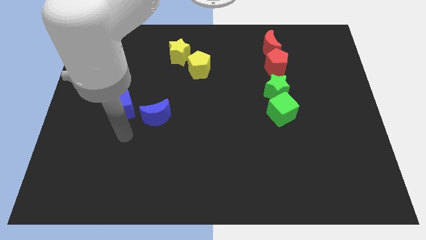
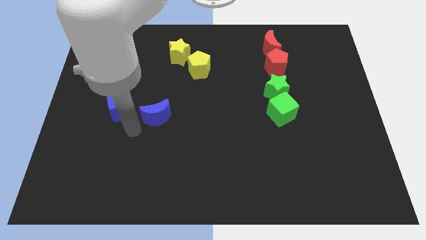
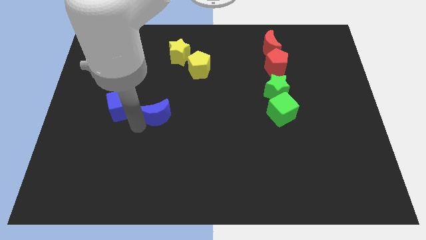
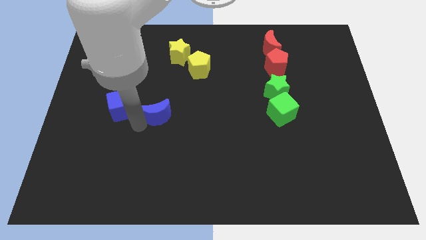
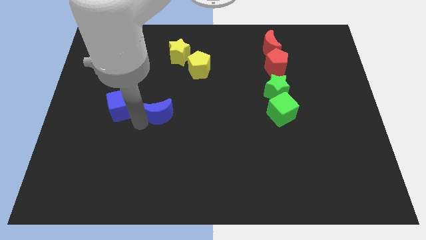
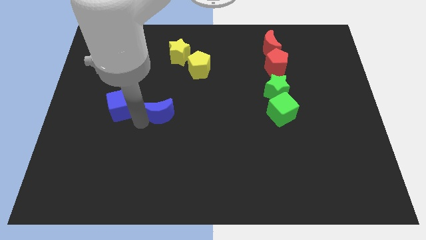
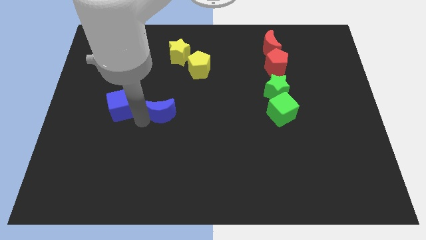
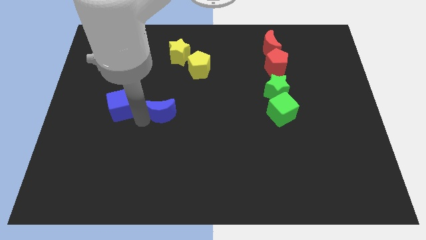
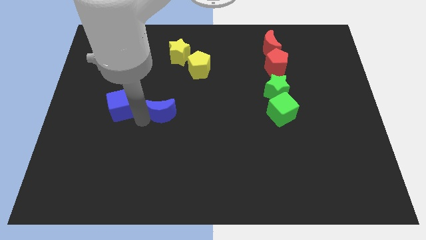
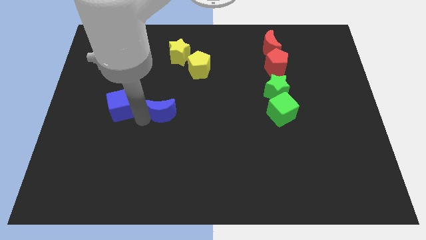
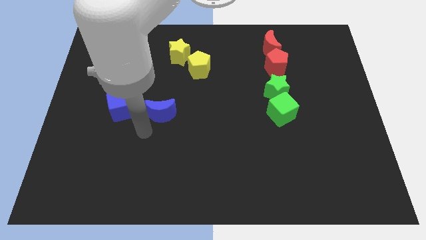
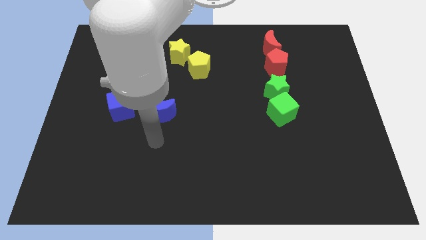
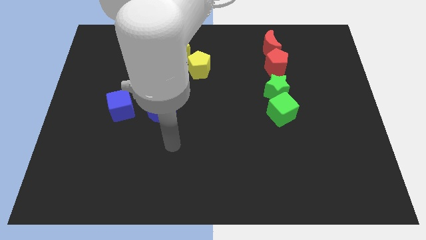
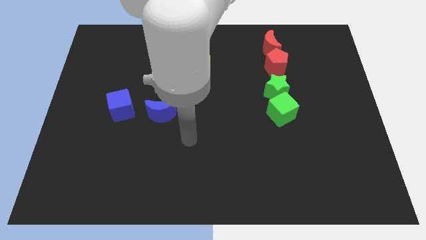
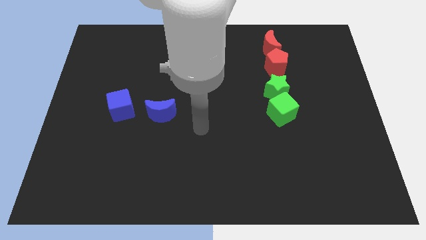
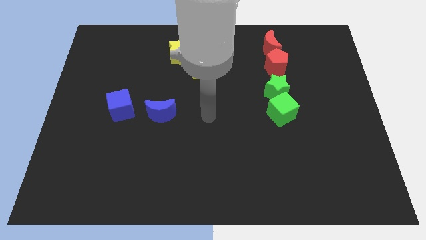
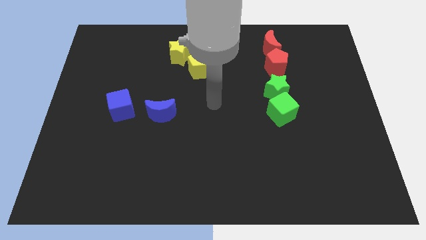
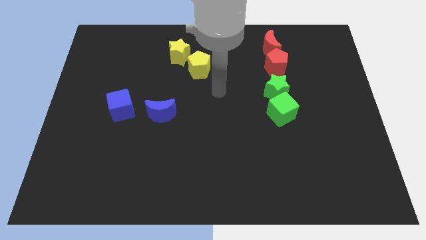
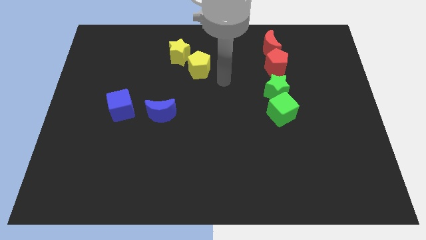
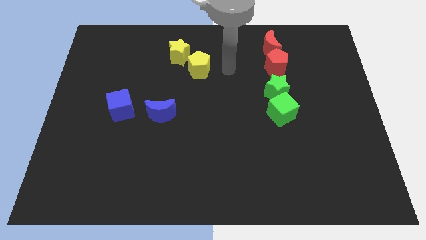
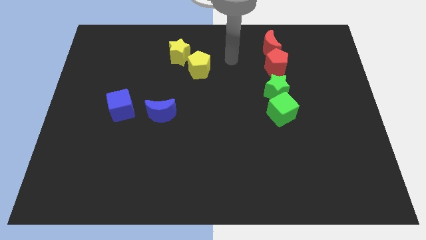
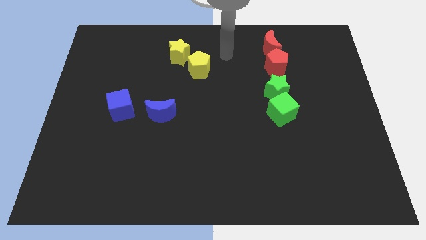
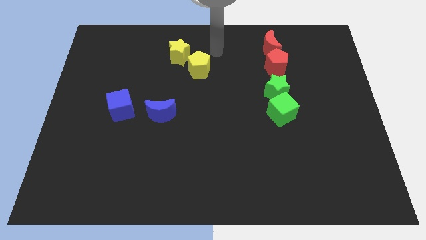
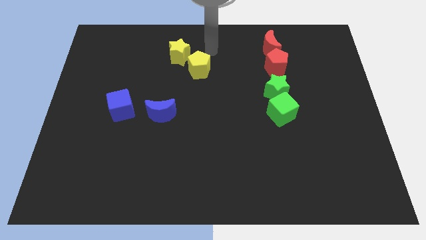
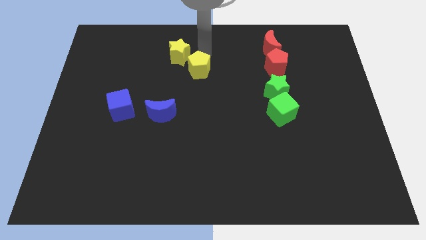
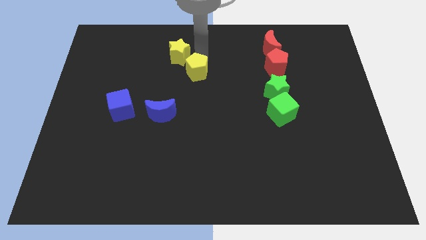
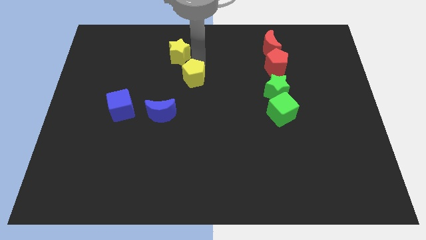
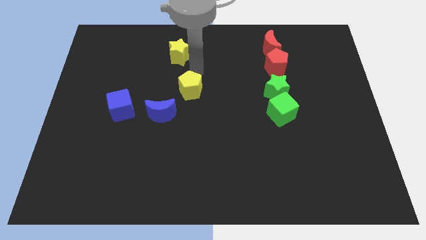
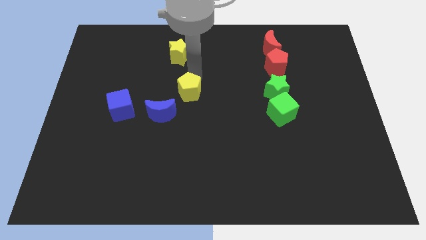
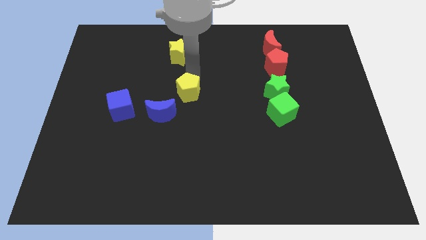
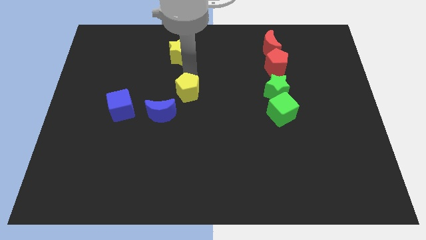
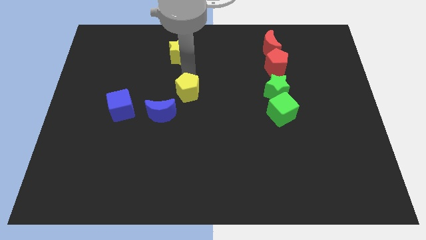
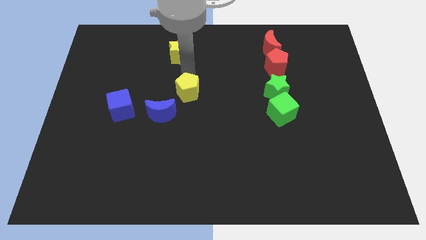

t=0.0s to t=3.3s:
move the yellow pentagon away from the yellow star

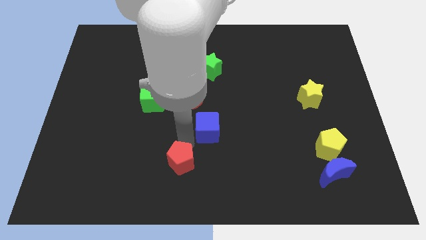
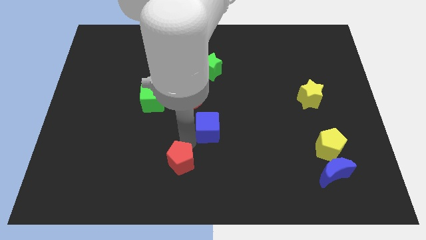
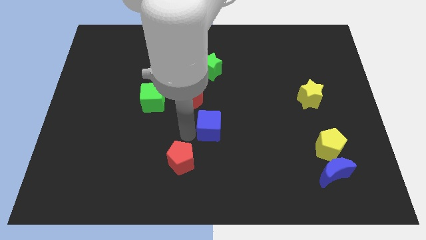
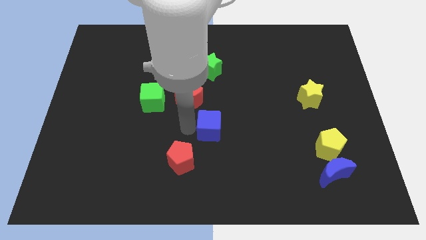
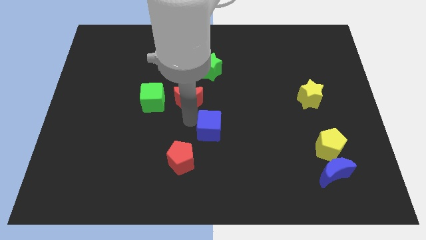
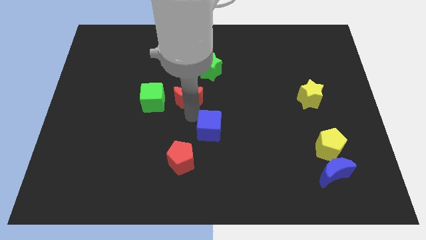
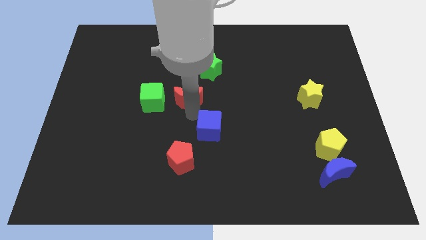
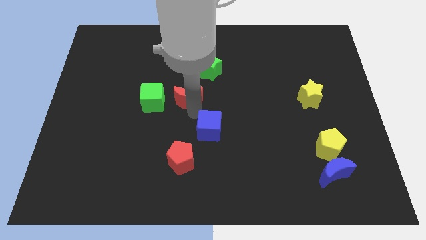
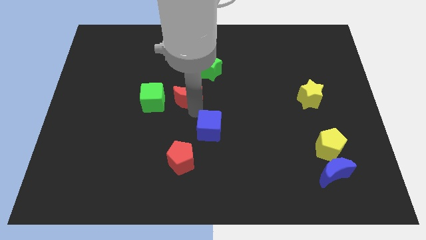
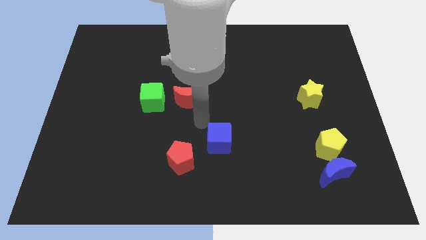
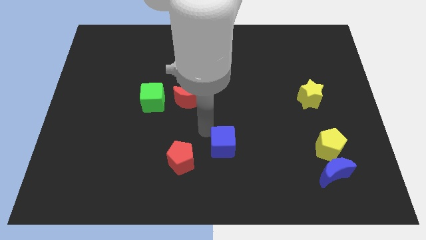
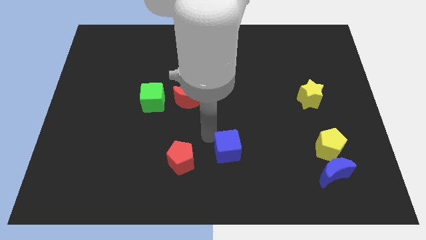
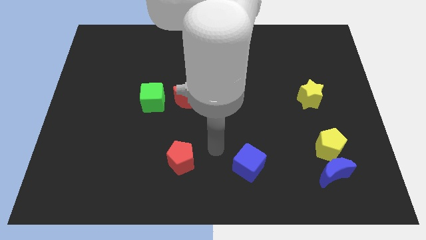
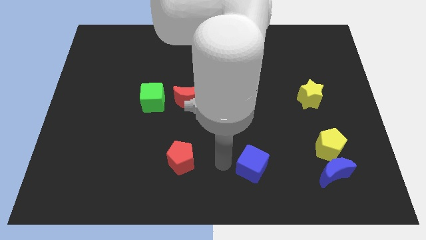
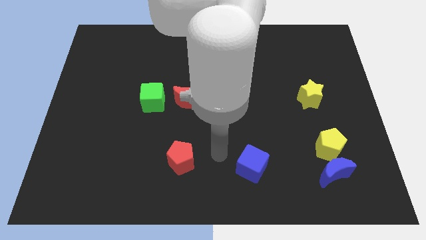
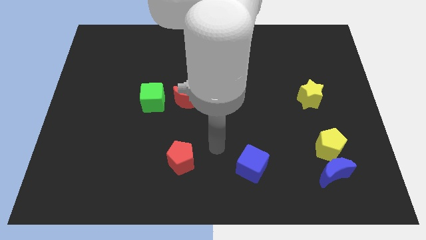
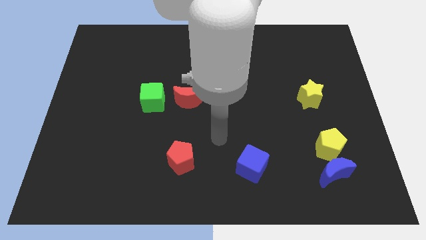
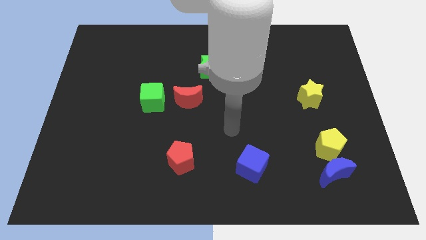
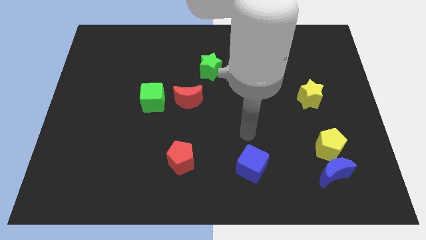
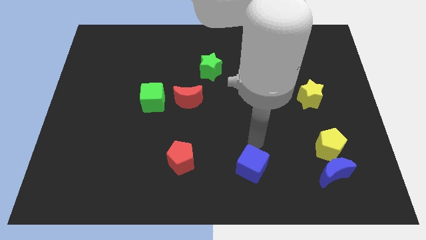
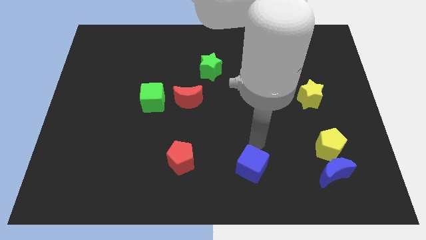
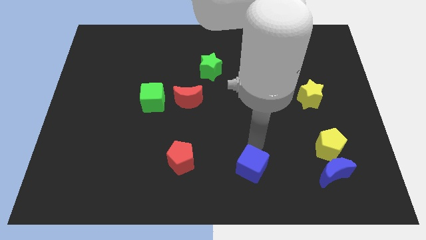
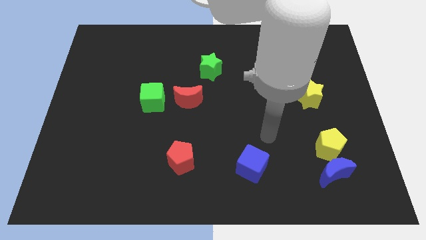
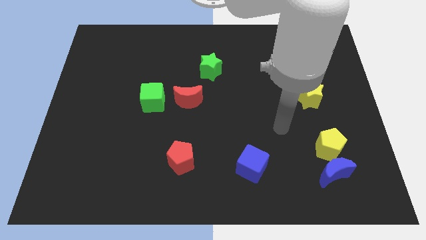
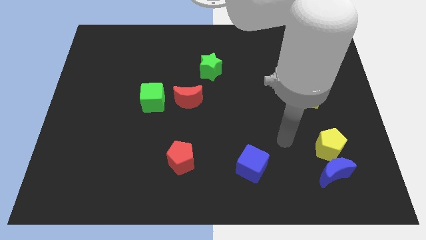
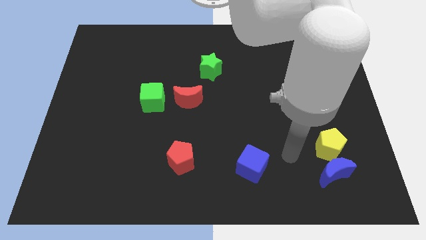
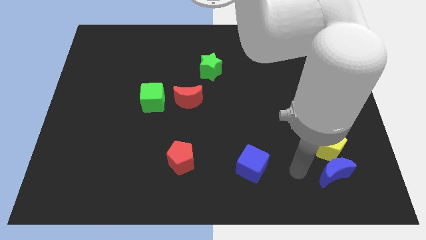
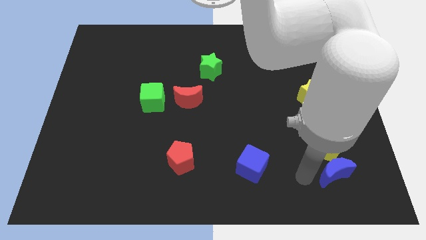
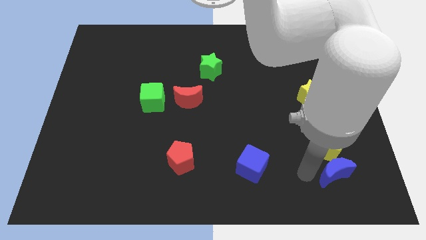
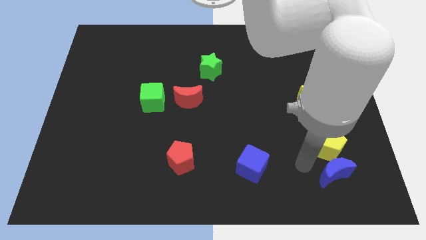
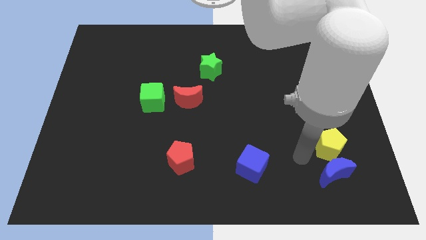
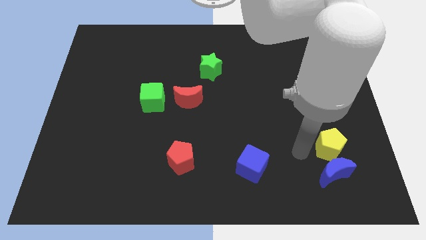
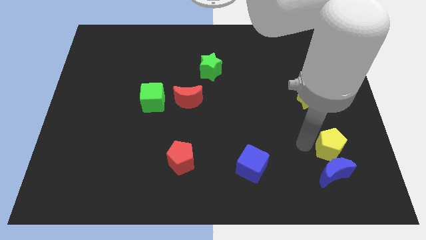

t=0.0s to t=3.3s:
move the blue cube to the center bottom of the board

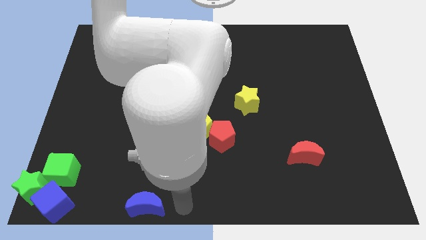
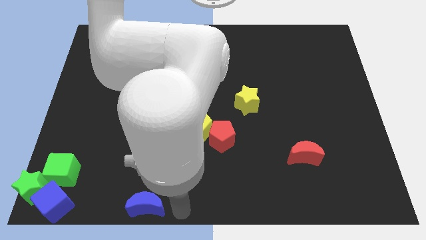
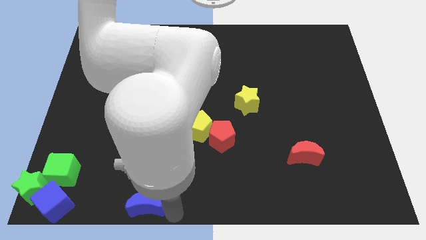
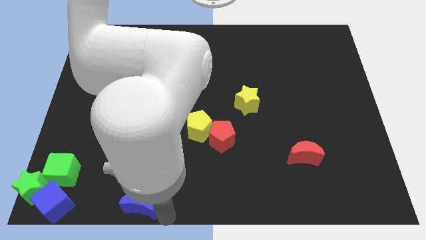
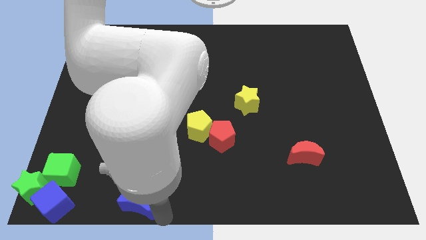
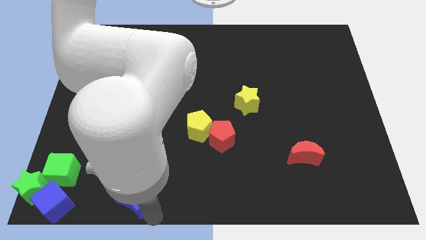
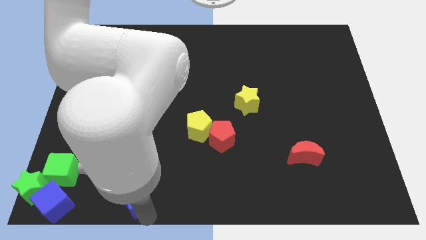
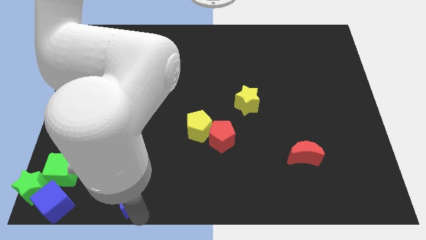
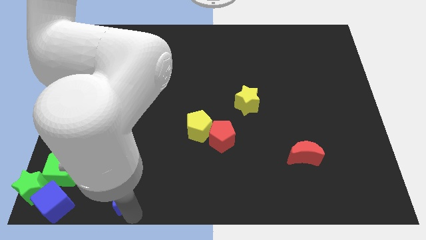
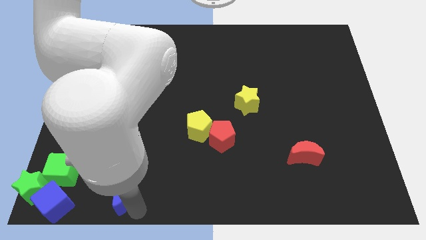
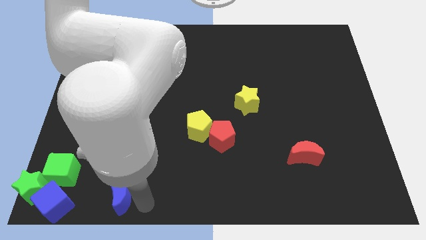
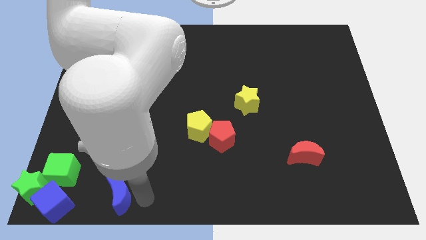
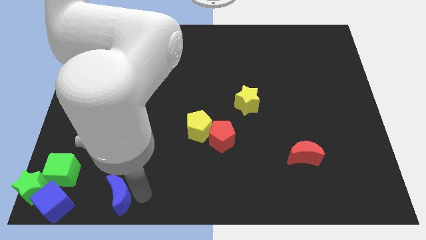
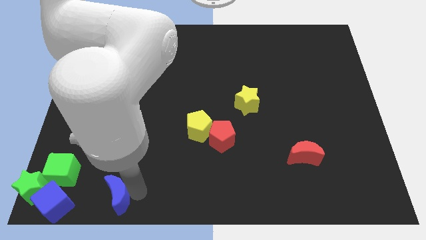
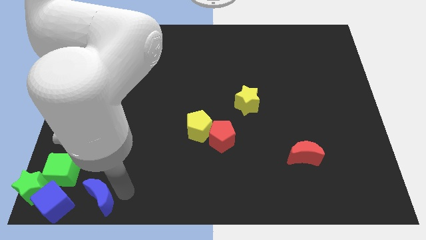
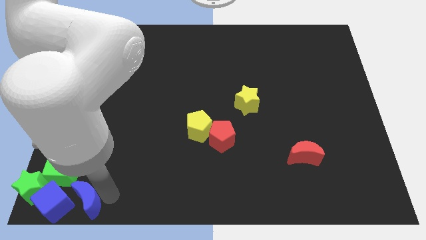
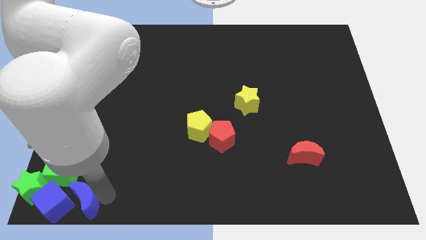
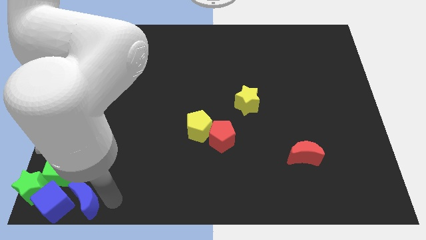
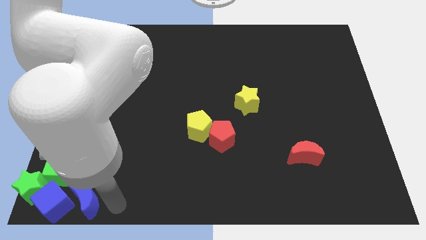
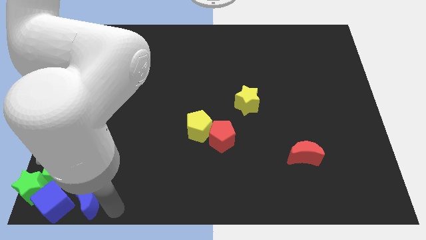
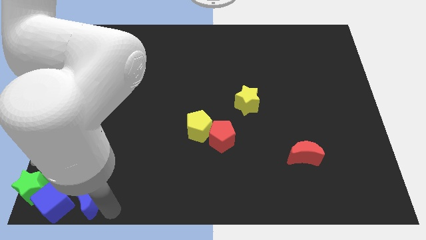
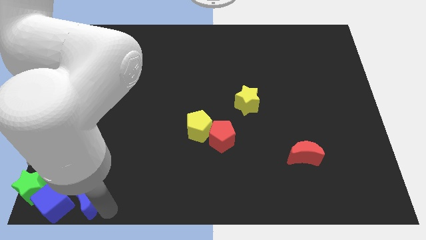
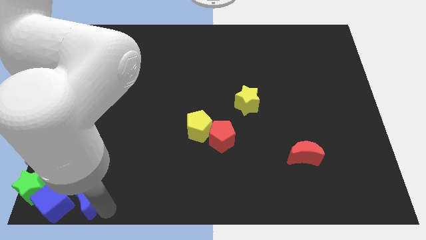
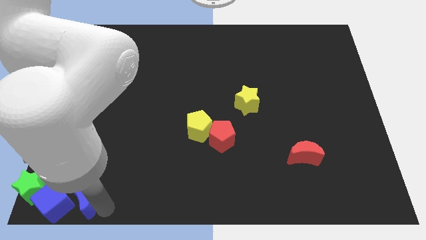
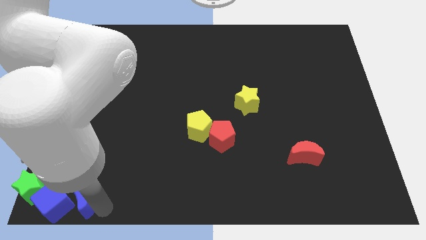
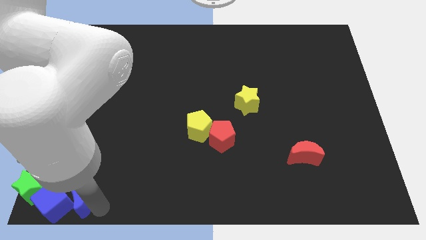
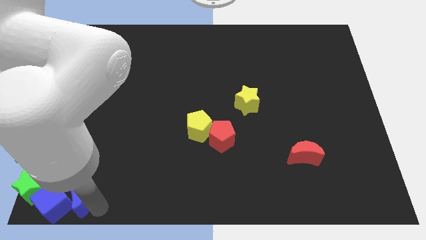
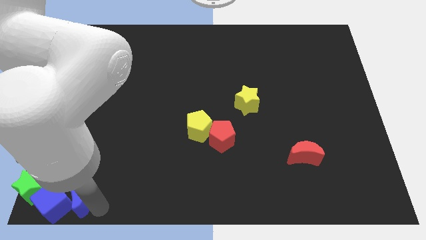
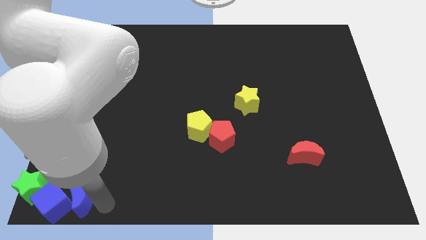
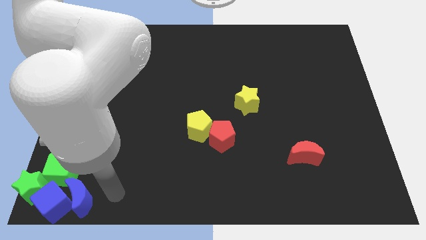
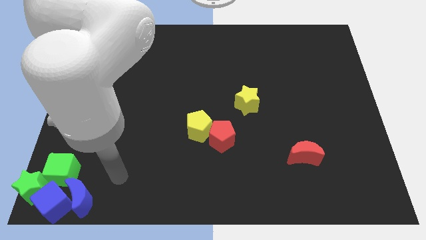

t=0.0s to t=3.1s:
place the blue crescent close to the blue cube
